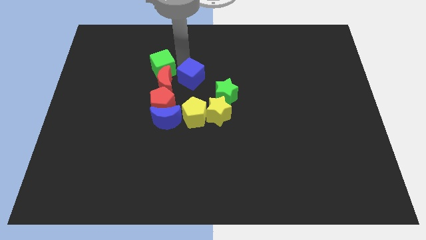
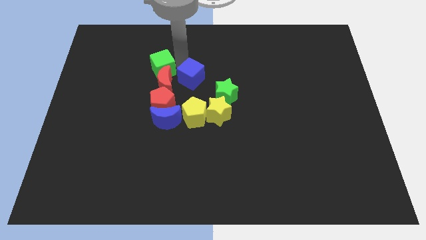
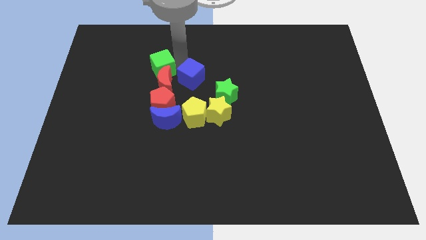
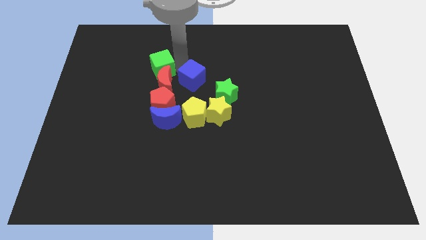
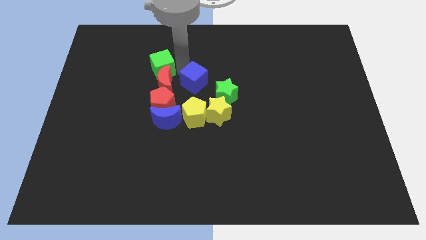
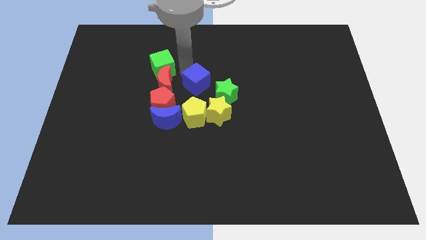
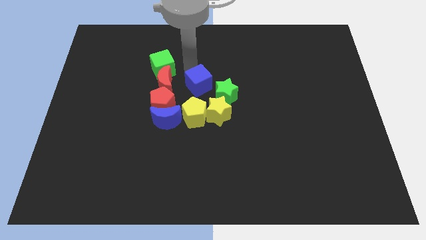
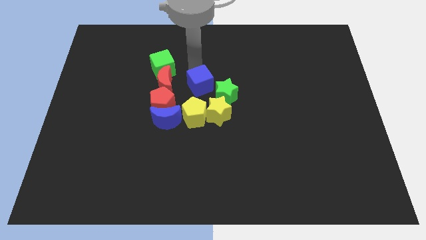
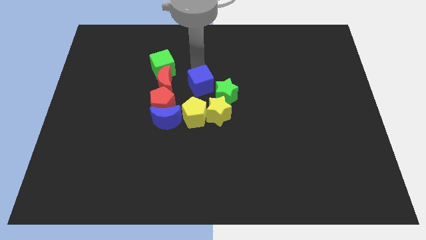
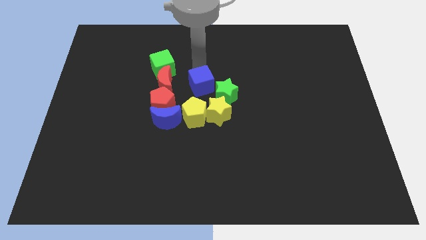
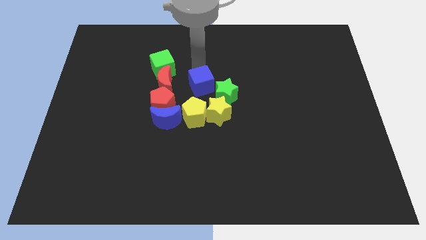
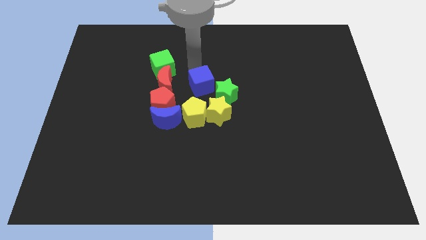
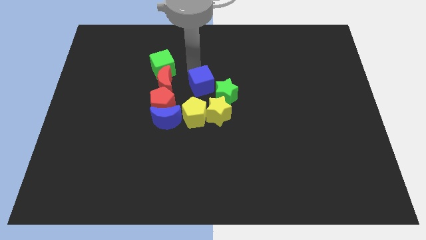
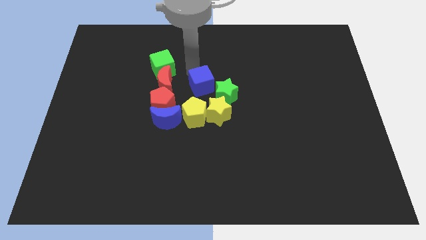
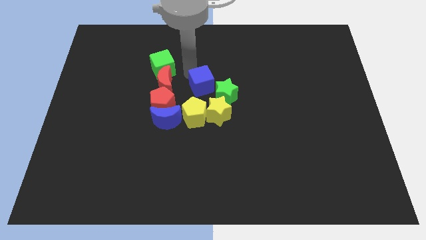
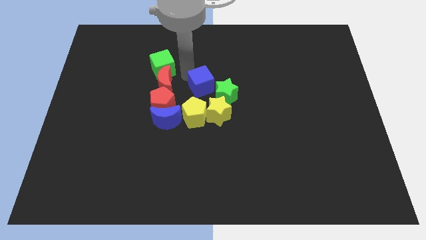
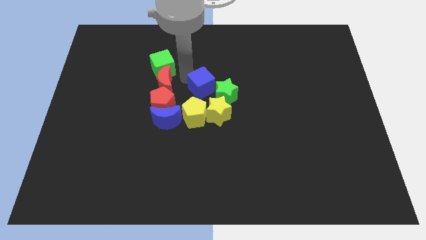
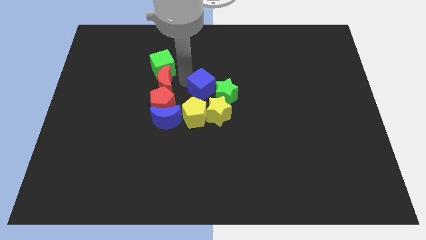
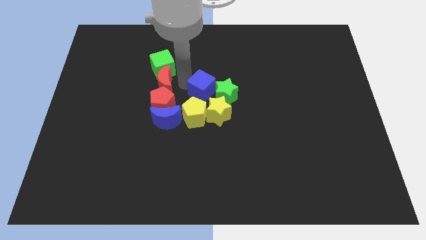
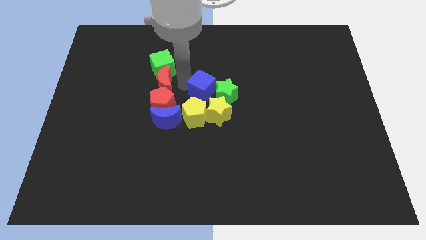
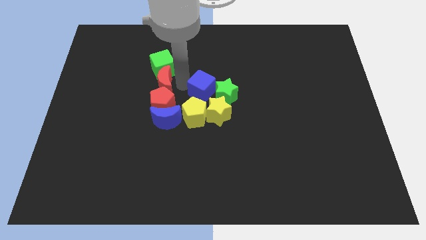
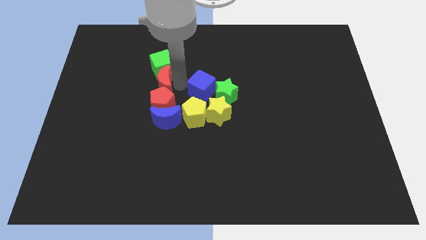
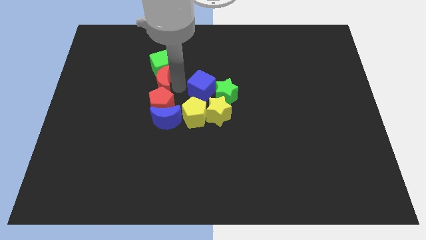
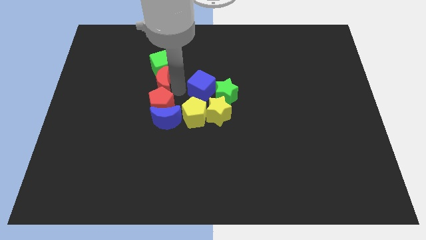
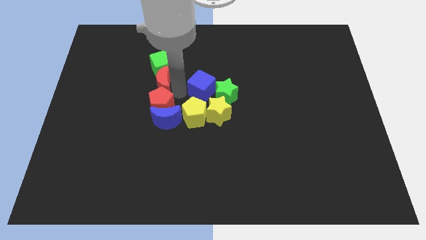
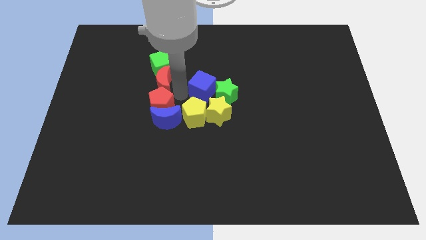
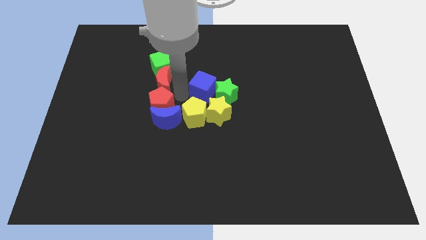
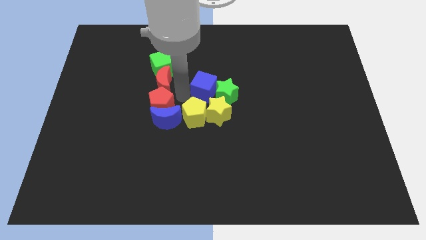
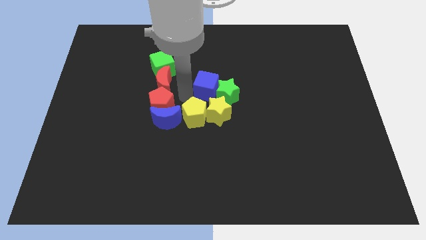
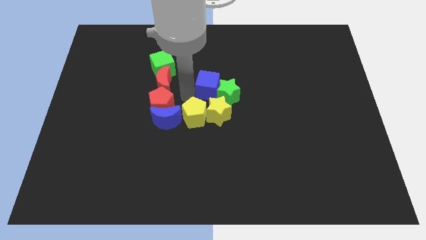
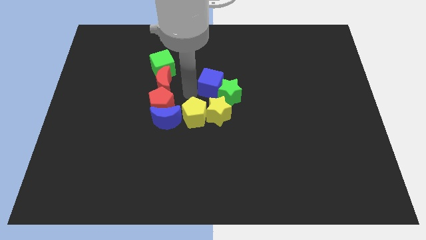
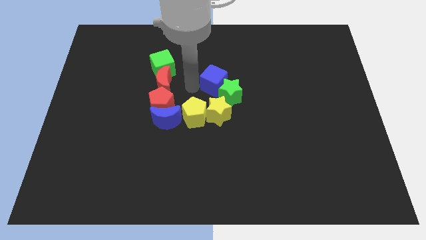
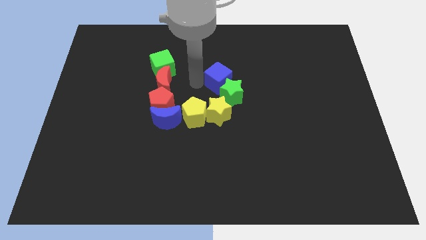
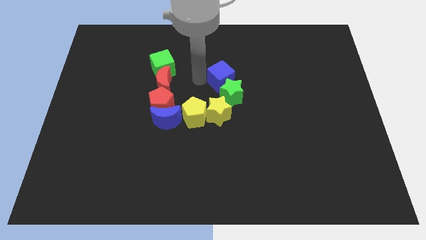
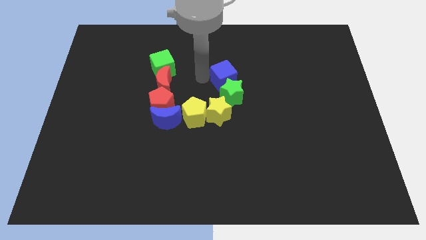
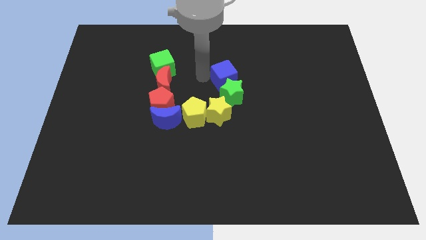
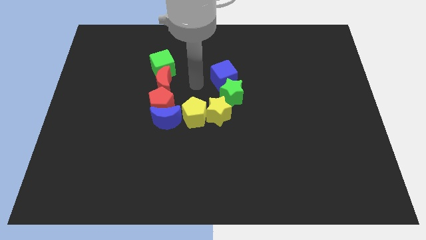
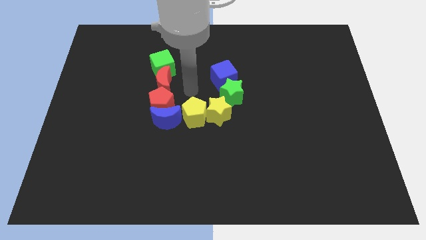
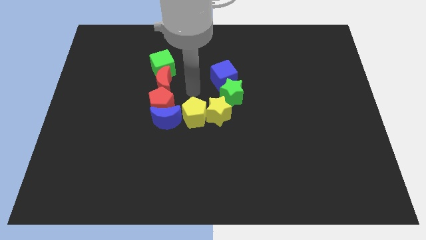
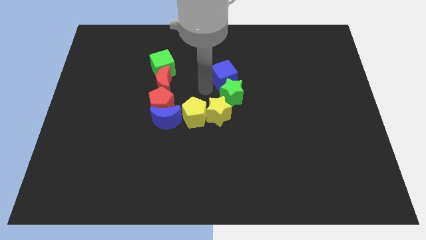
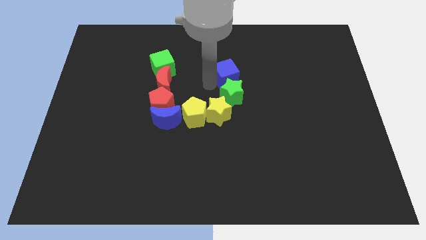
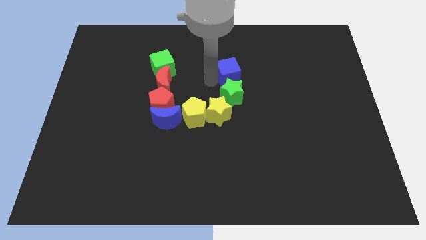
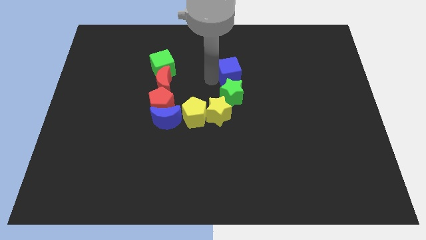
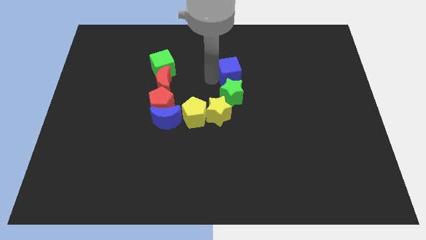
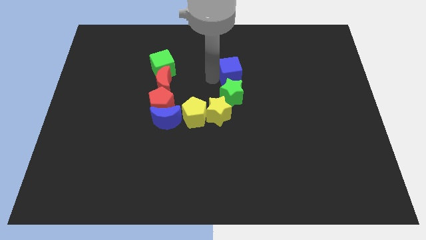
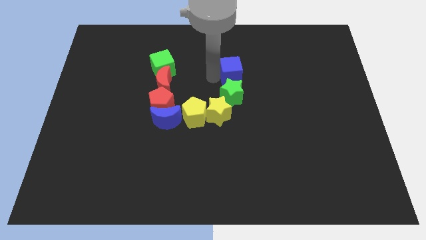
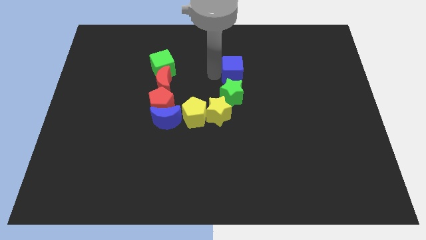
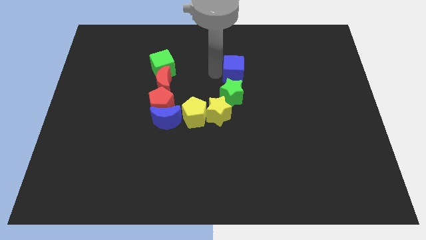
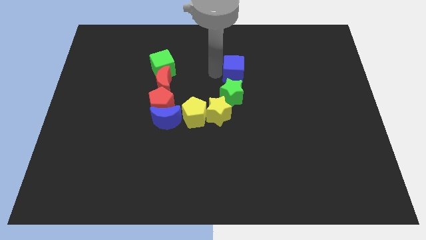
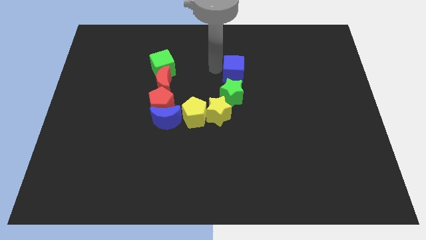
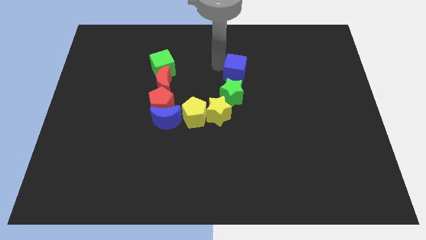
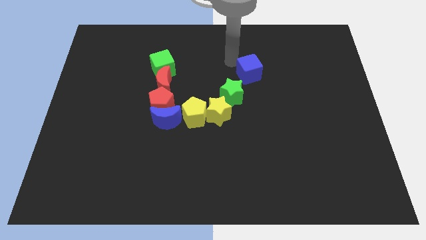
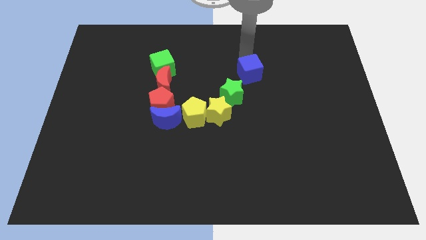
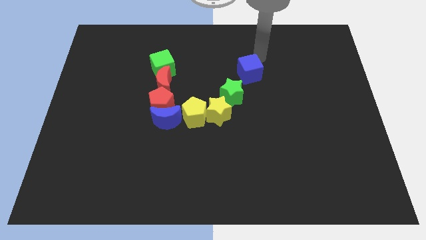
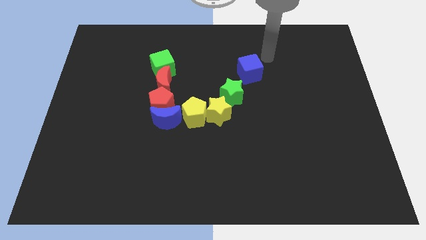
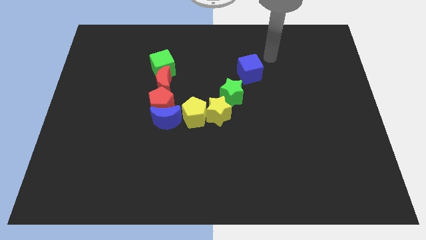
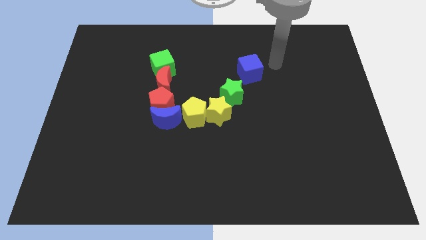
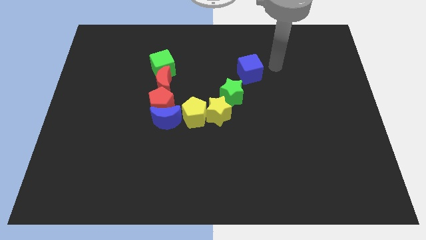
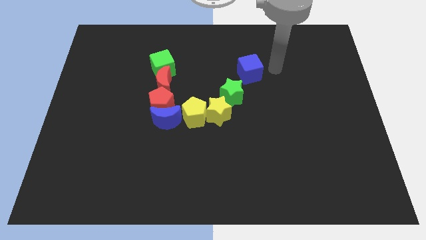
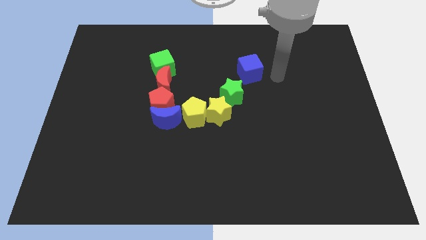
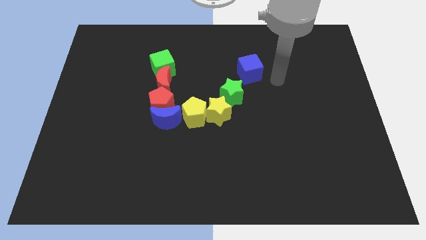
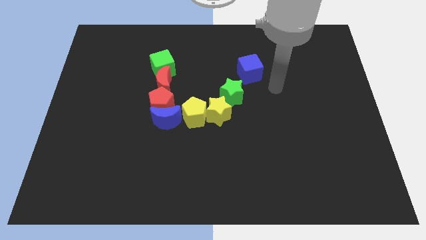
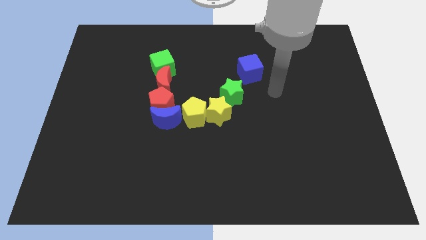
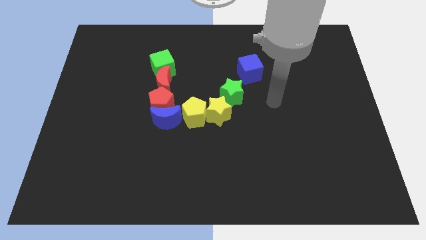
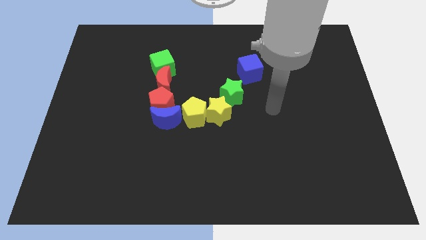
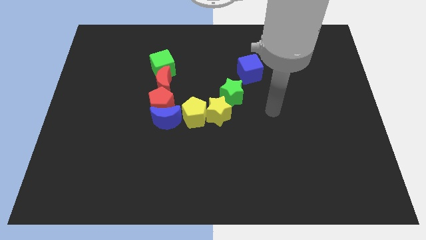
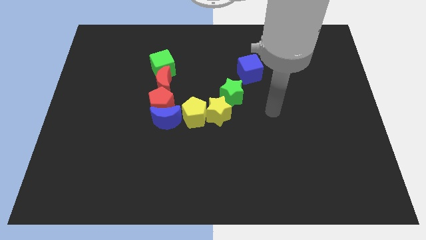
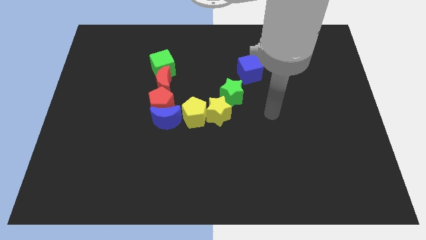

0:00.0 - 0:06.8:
move the blue cube to the top of the green star

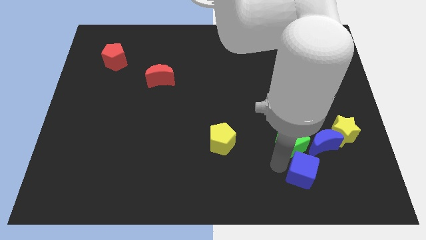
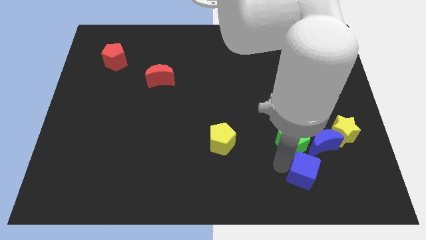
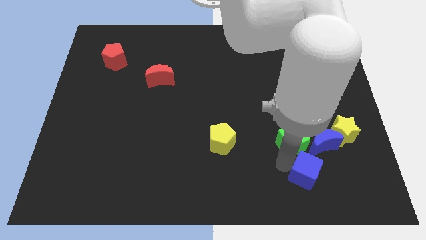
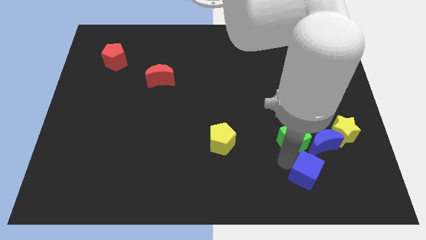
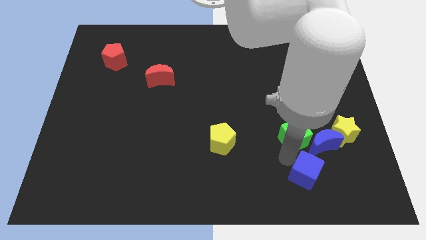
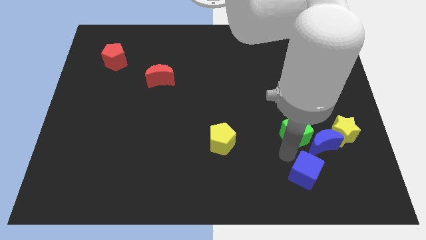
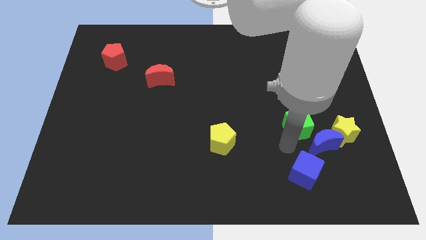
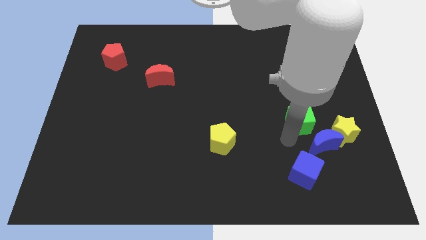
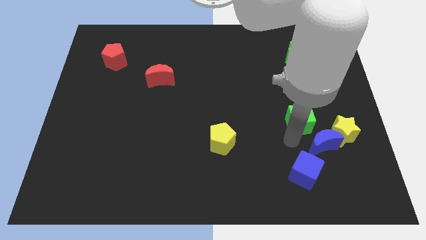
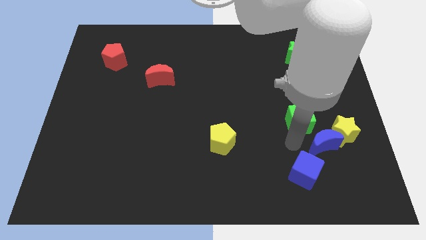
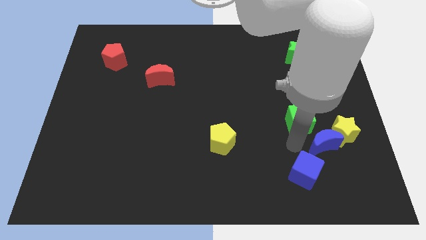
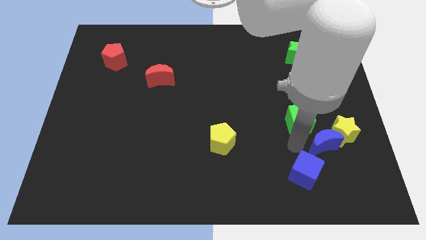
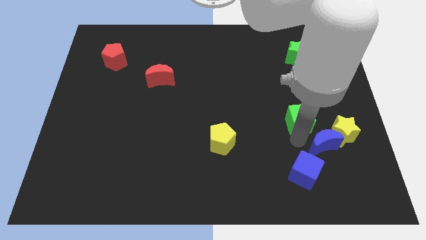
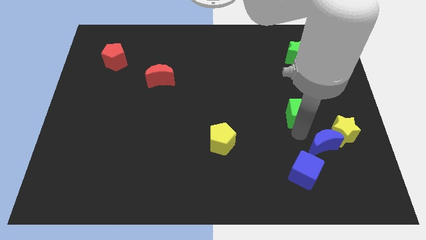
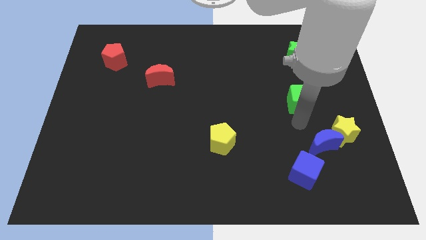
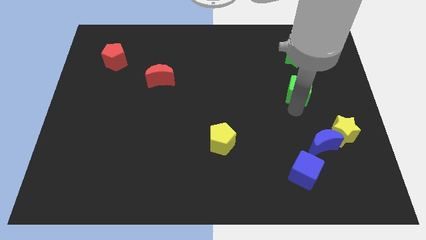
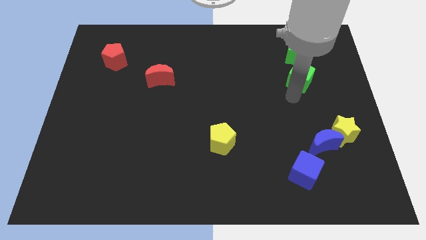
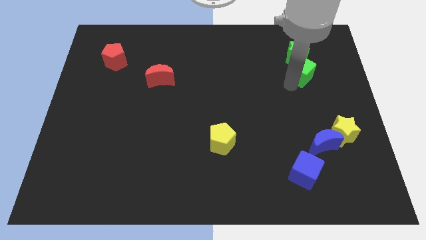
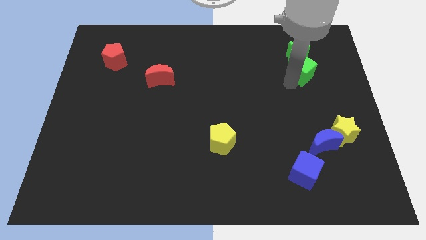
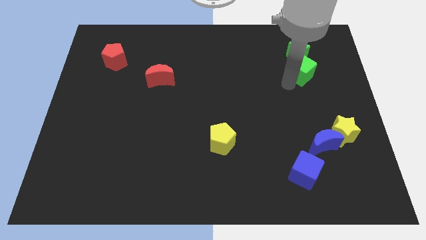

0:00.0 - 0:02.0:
push the green cube into the green star
